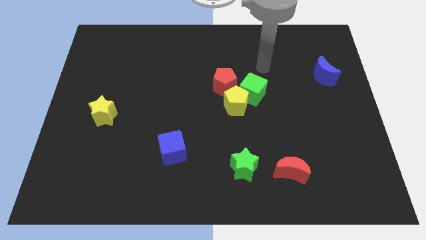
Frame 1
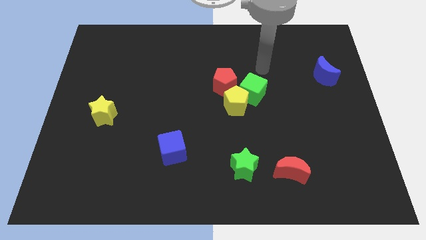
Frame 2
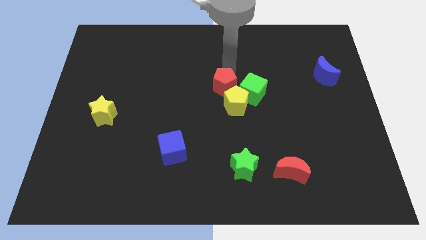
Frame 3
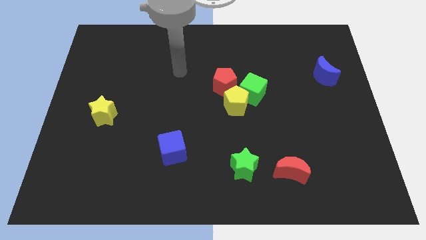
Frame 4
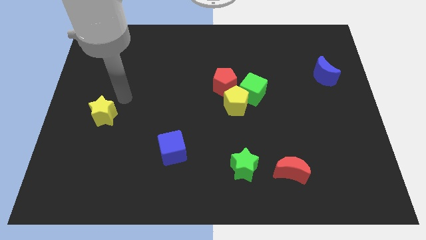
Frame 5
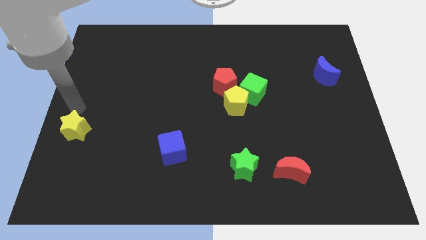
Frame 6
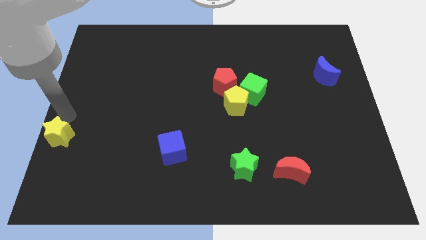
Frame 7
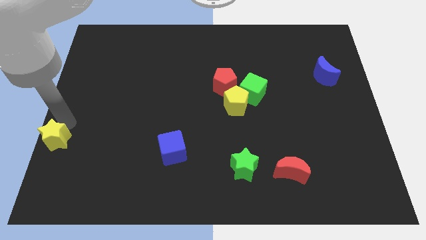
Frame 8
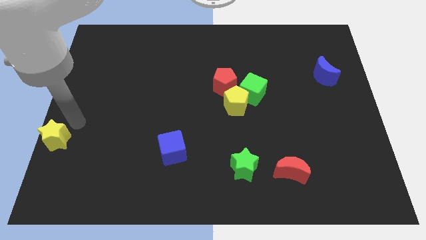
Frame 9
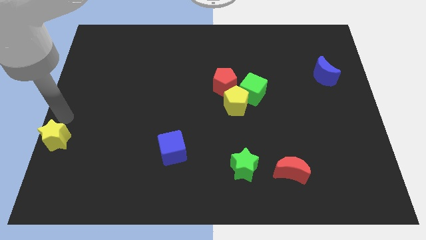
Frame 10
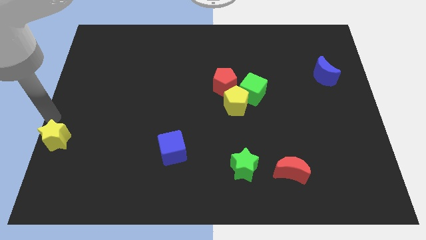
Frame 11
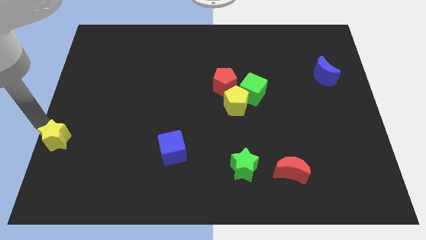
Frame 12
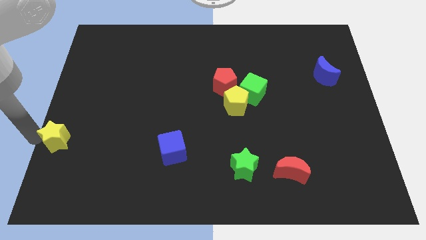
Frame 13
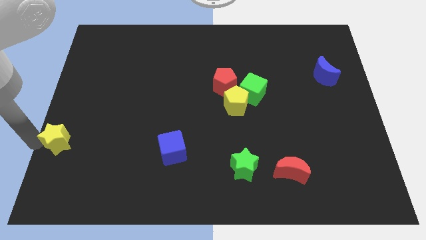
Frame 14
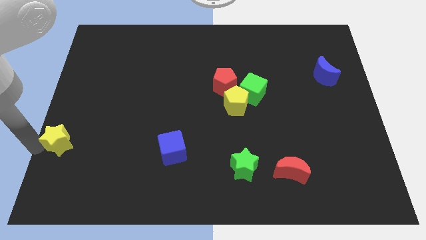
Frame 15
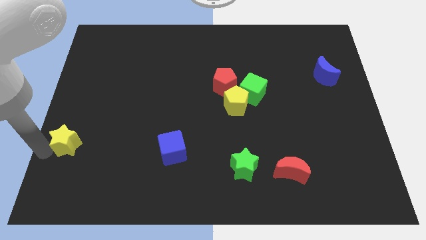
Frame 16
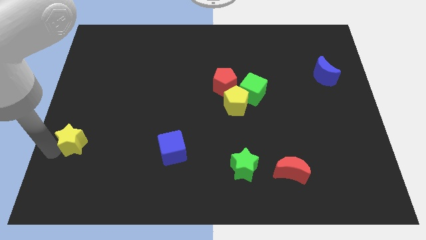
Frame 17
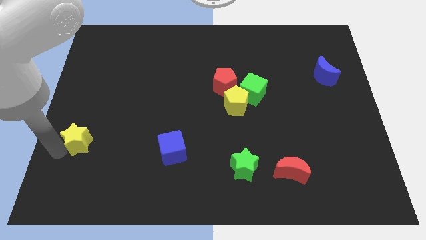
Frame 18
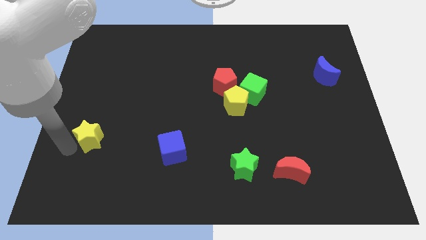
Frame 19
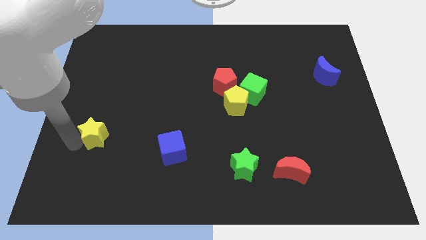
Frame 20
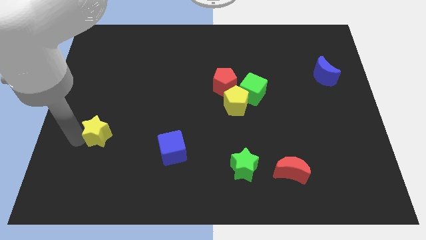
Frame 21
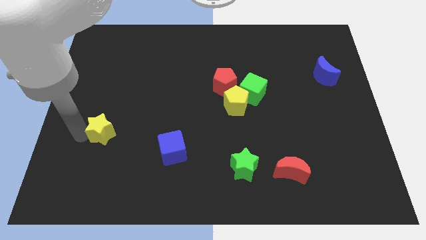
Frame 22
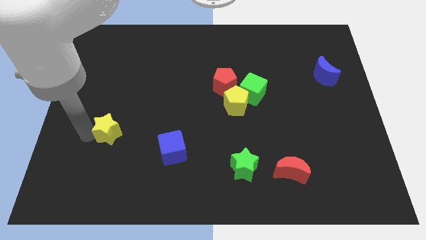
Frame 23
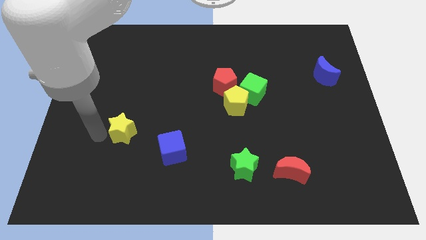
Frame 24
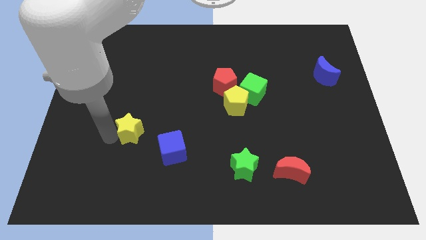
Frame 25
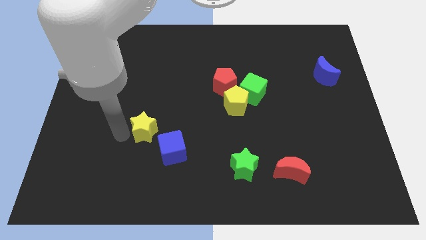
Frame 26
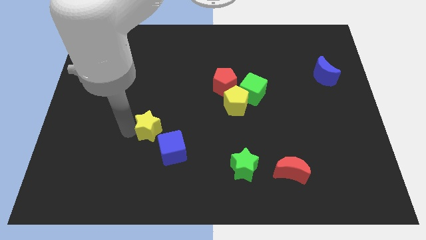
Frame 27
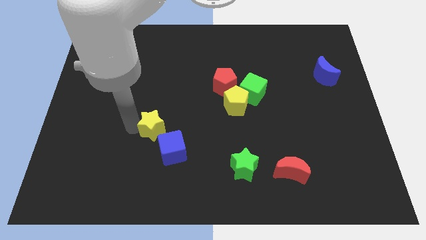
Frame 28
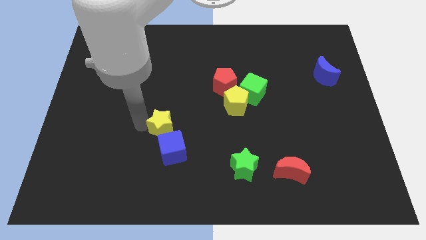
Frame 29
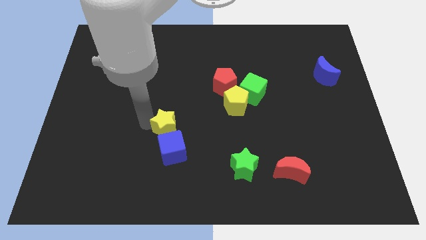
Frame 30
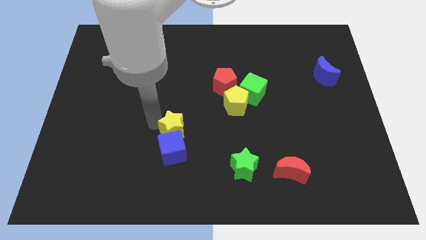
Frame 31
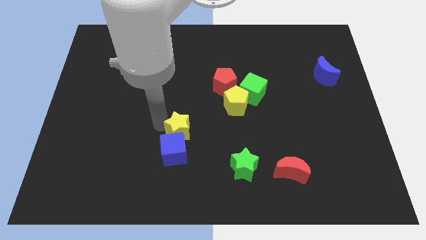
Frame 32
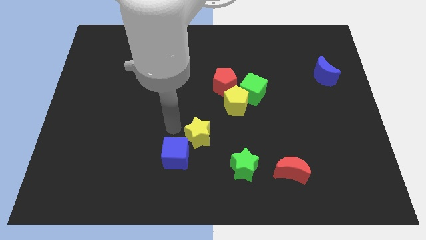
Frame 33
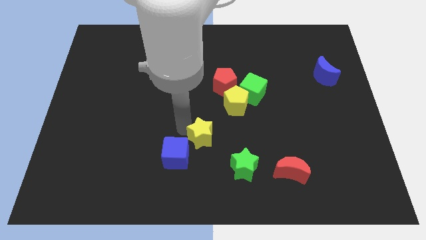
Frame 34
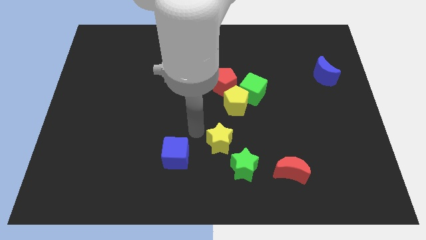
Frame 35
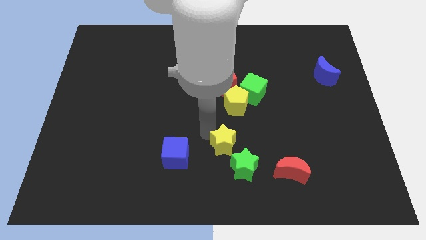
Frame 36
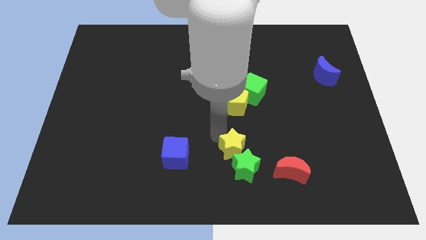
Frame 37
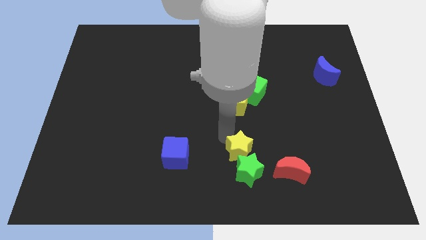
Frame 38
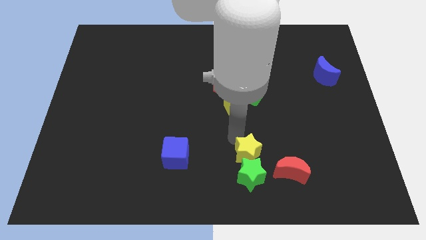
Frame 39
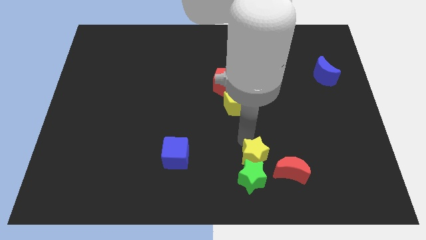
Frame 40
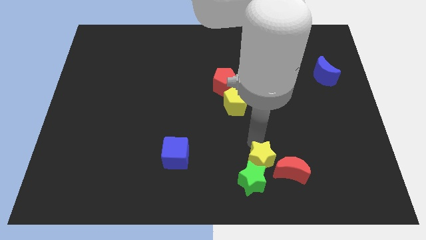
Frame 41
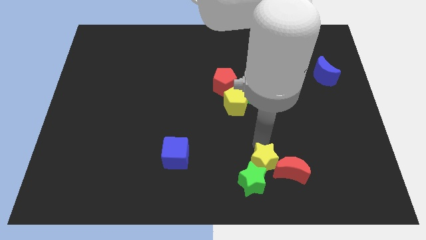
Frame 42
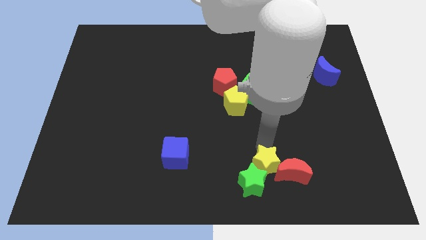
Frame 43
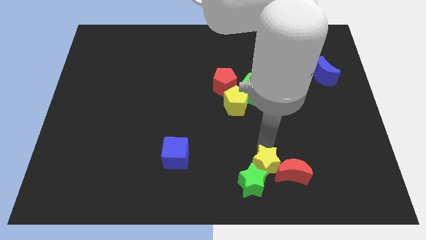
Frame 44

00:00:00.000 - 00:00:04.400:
push the yellow star to the red moon

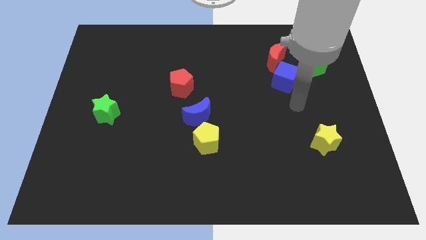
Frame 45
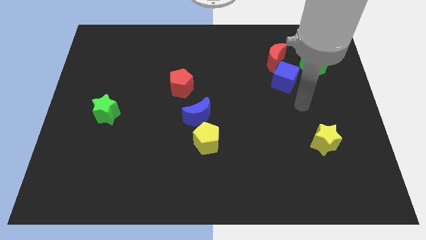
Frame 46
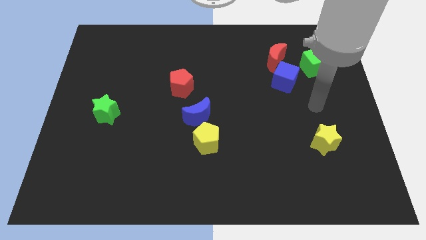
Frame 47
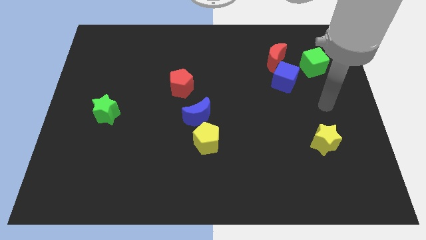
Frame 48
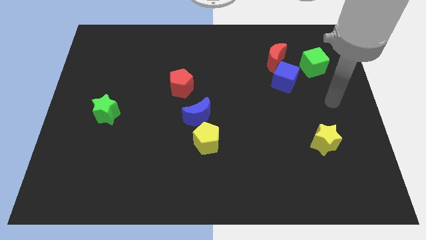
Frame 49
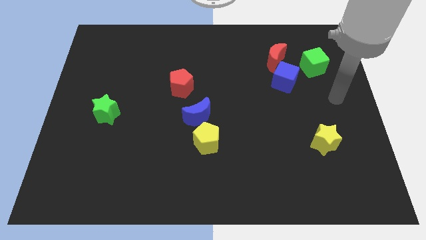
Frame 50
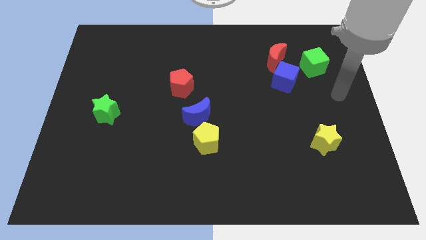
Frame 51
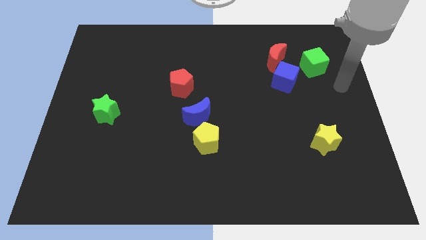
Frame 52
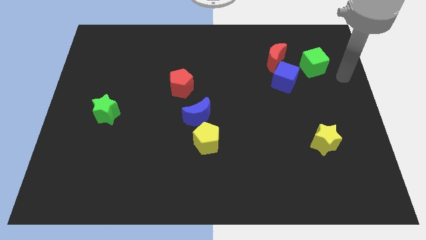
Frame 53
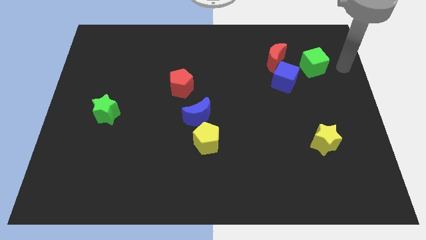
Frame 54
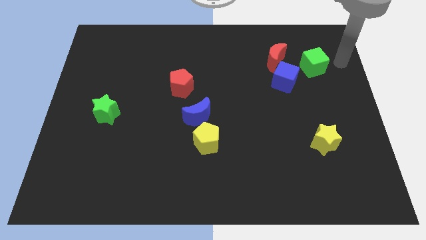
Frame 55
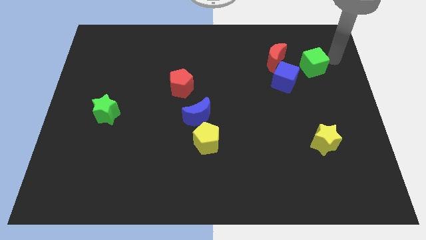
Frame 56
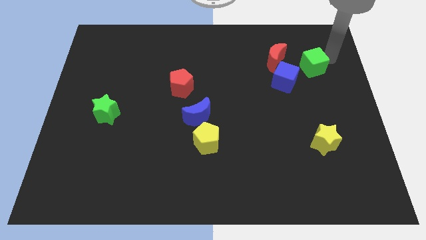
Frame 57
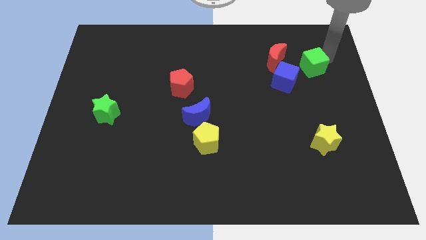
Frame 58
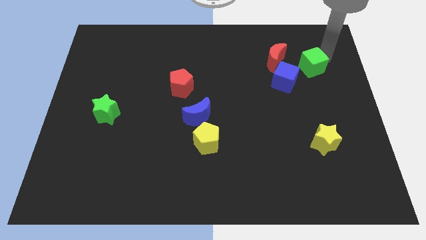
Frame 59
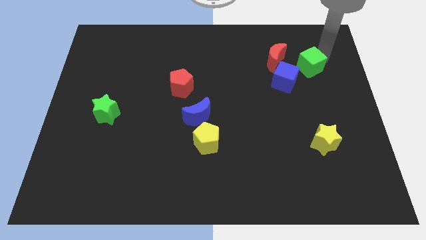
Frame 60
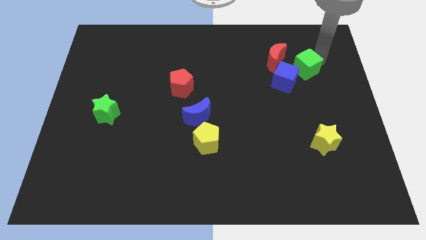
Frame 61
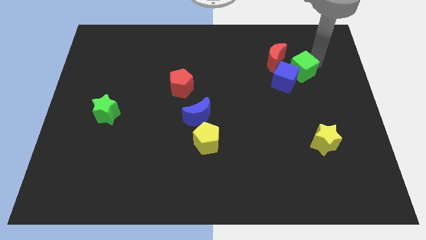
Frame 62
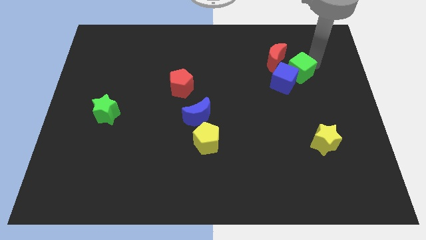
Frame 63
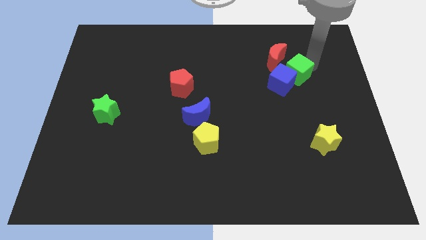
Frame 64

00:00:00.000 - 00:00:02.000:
put the green cube close to the blue cube

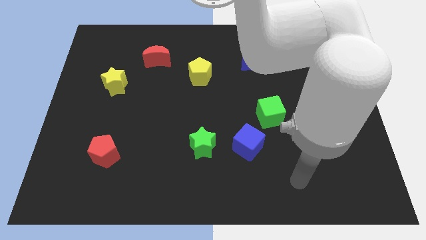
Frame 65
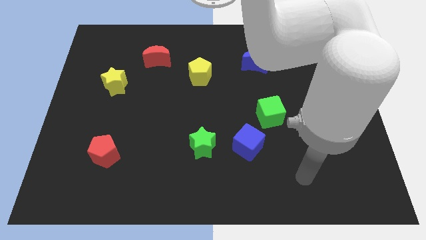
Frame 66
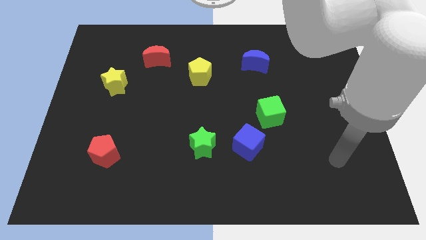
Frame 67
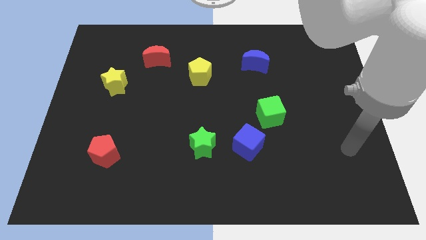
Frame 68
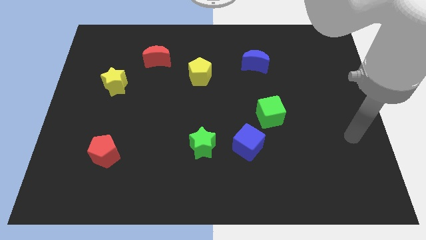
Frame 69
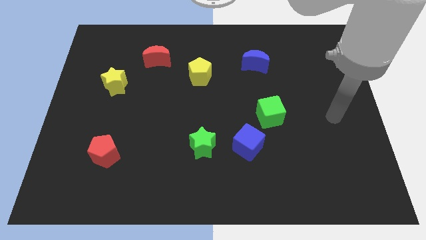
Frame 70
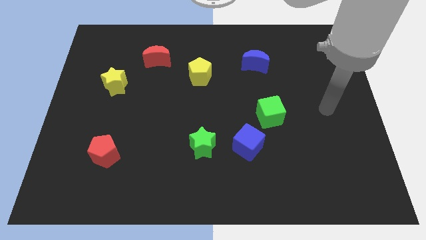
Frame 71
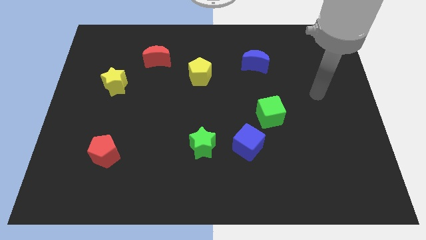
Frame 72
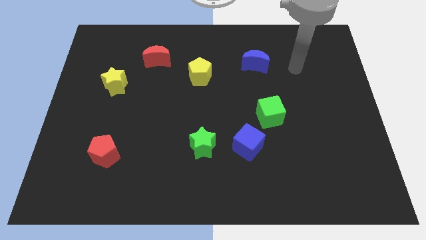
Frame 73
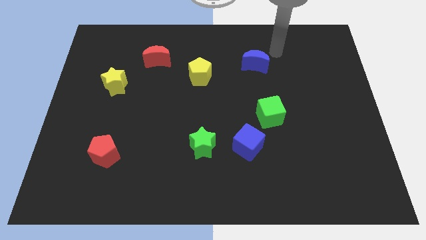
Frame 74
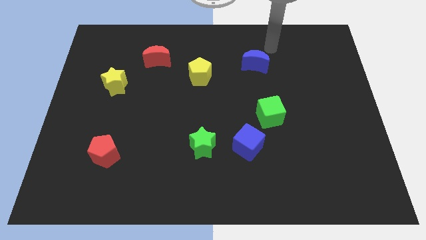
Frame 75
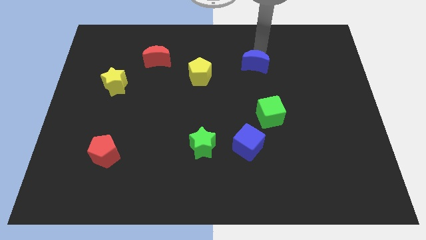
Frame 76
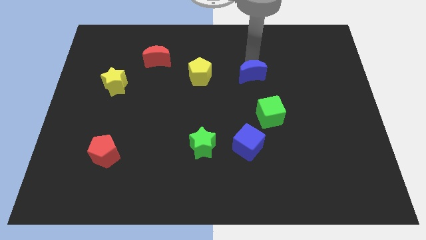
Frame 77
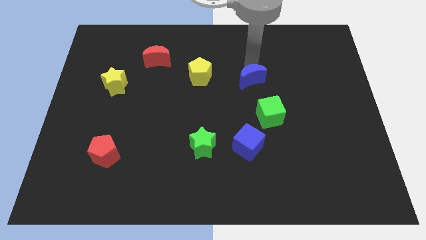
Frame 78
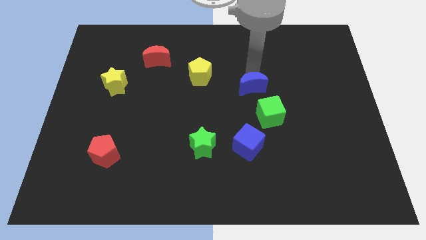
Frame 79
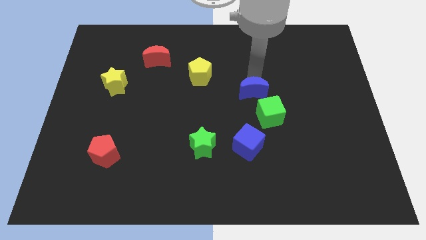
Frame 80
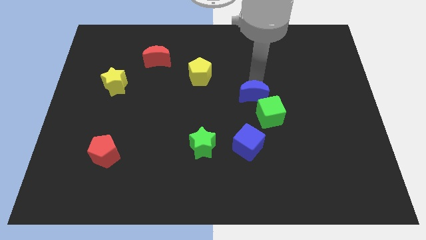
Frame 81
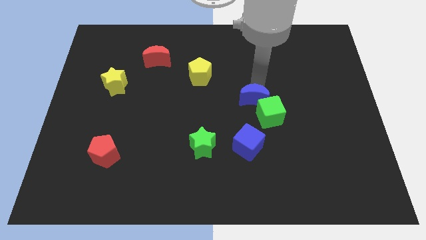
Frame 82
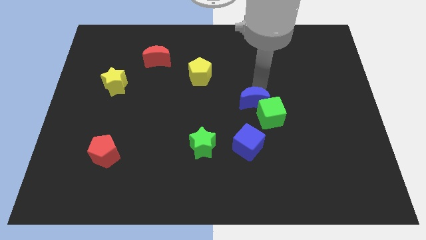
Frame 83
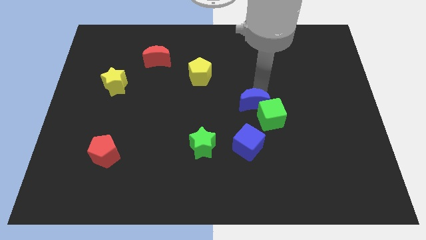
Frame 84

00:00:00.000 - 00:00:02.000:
slide the blue moon close to the green cube
